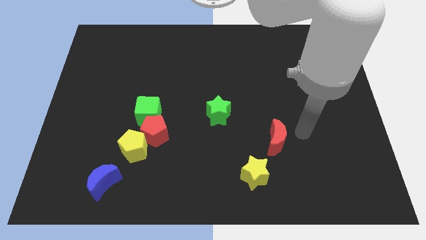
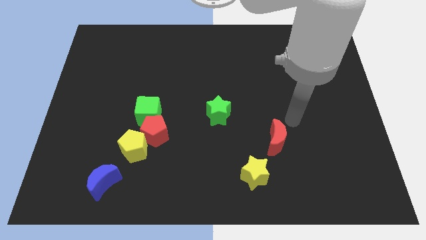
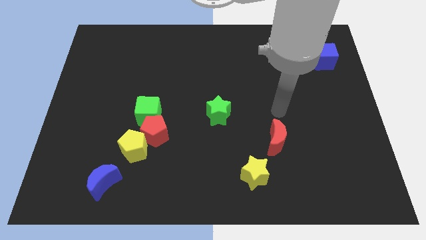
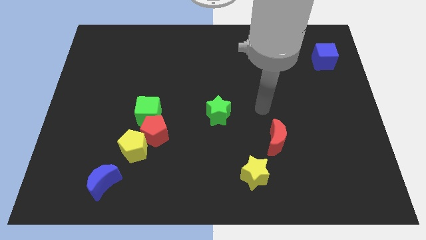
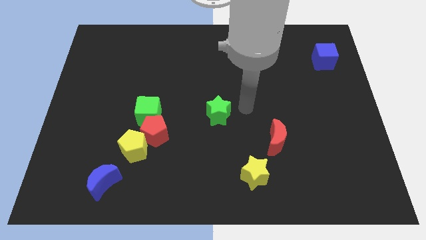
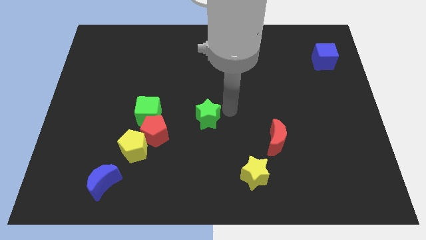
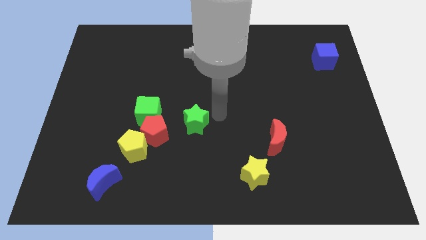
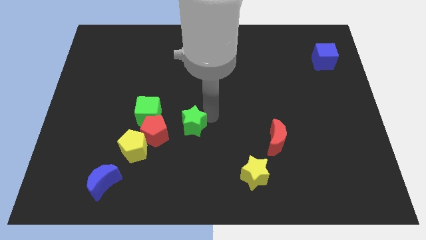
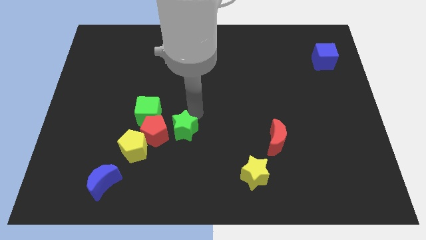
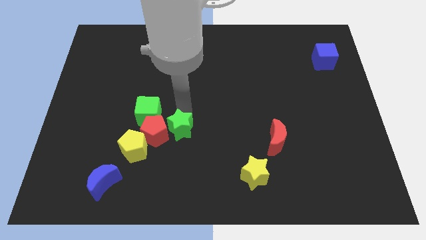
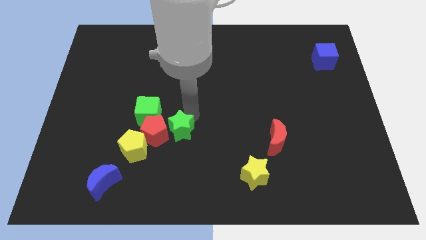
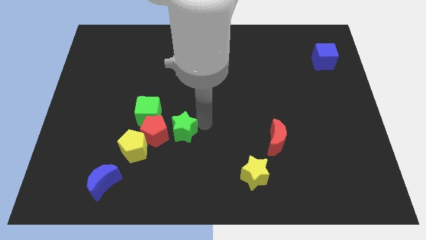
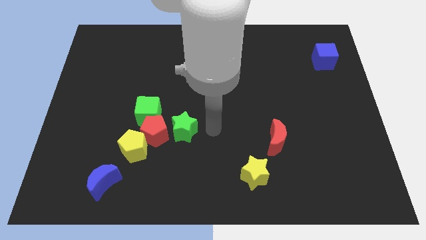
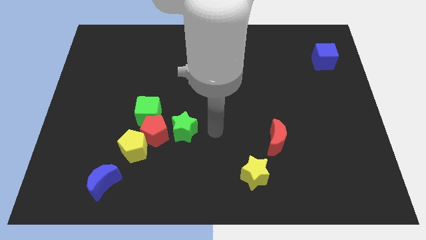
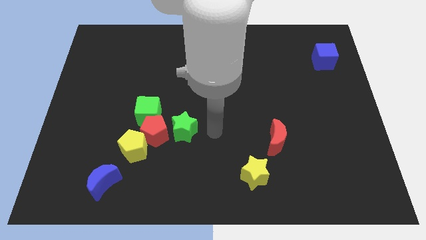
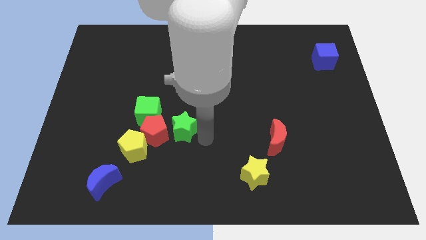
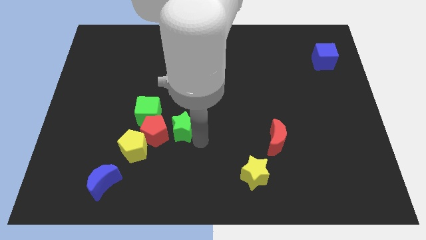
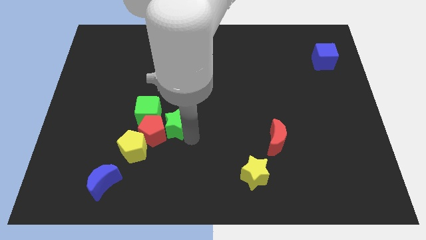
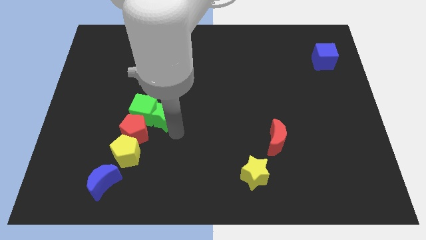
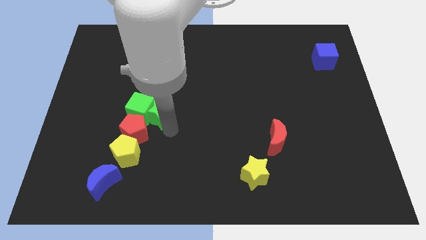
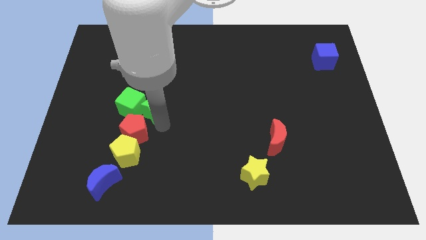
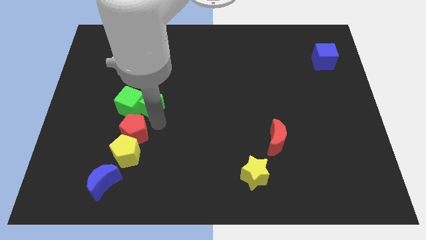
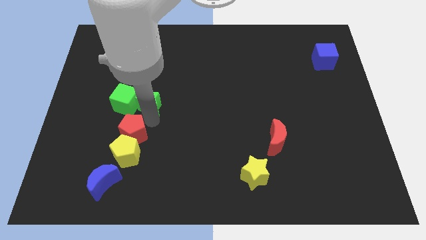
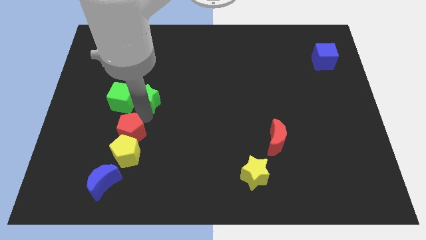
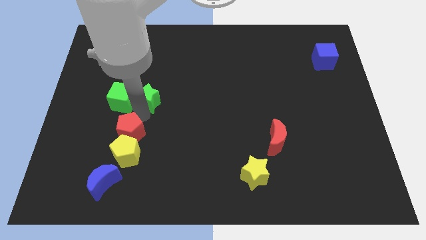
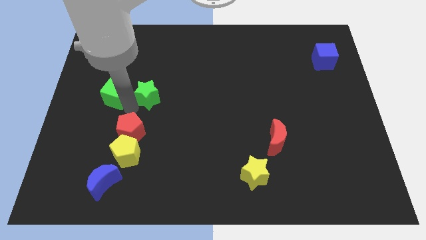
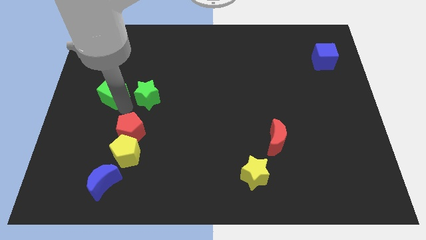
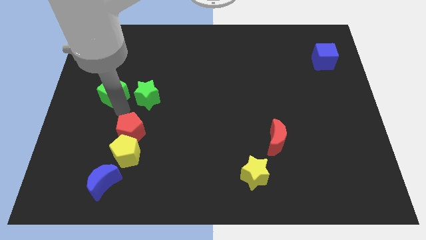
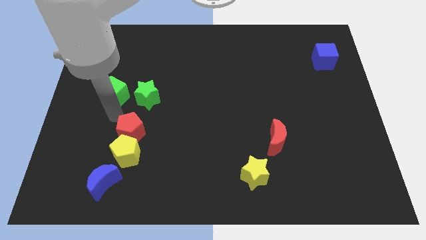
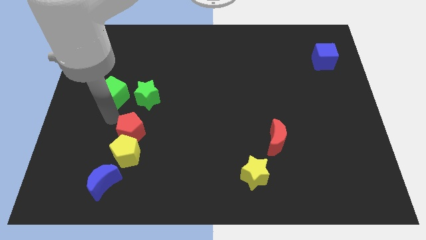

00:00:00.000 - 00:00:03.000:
place green star adjacent to green cube

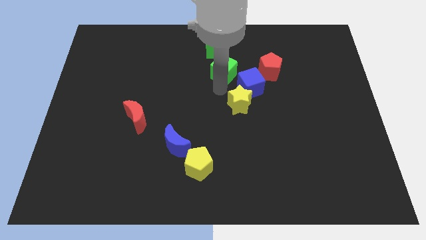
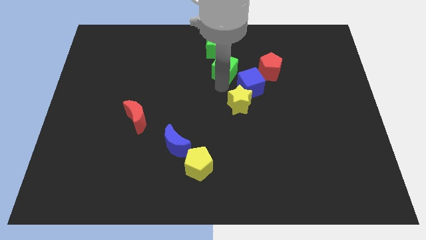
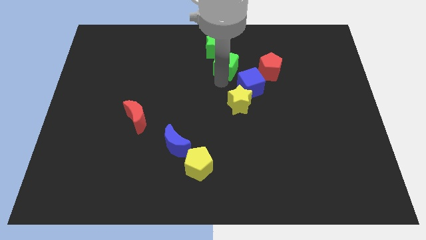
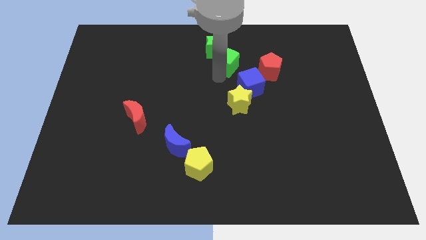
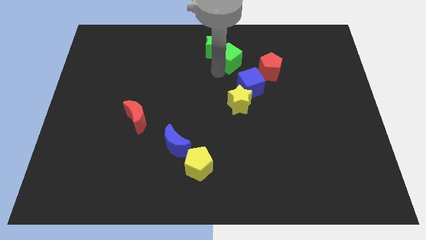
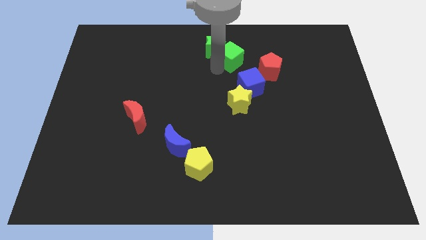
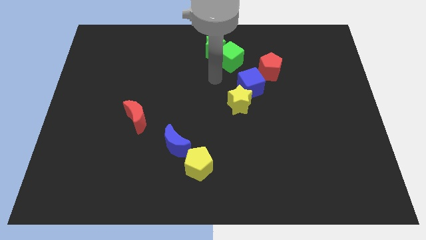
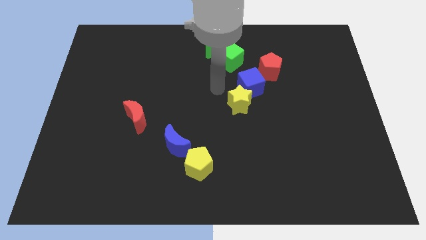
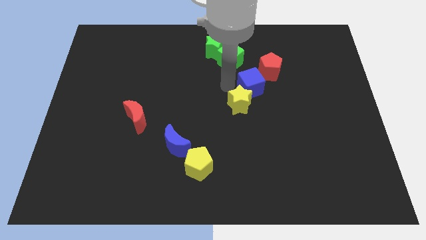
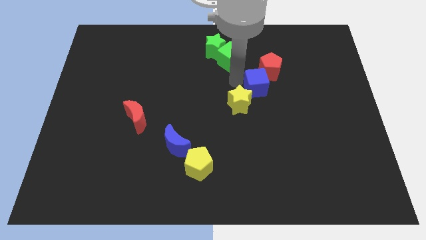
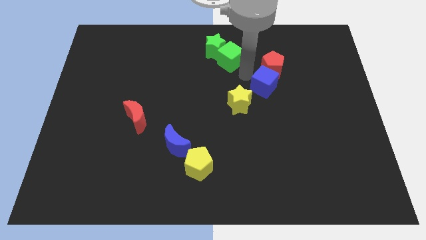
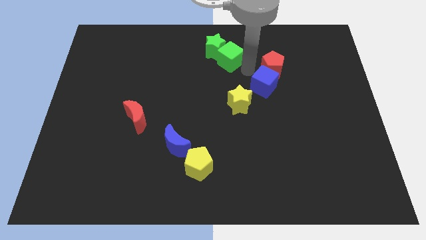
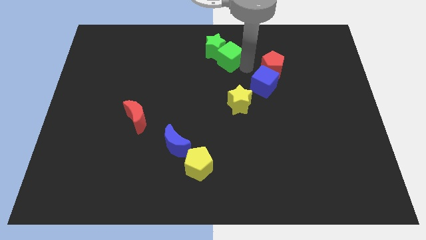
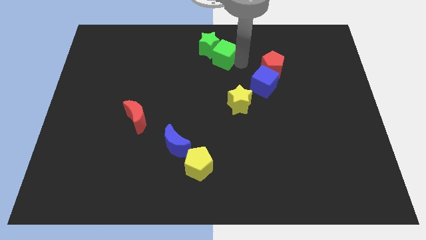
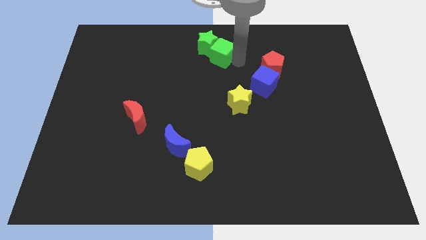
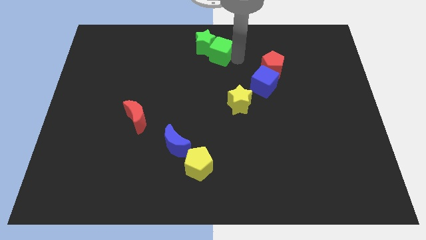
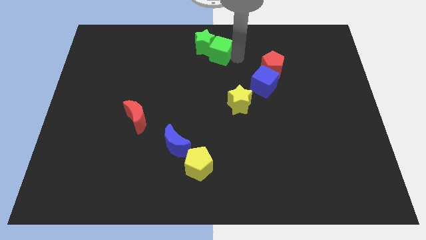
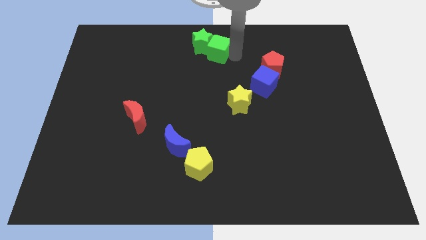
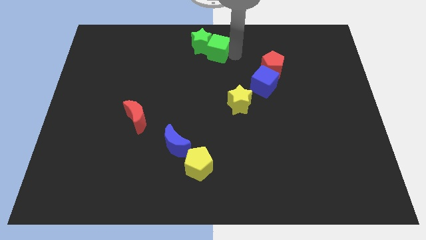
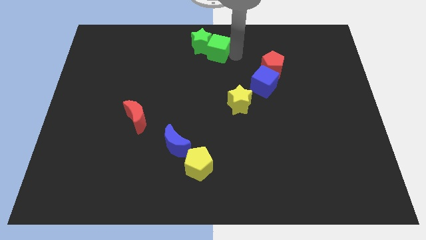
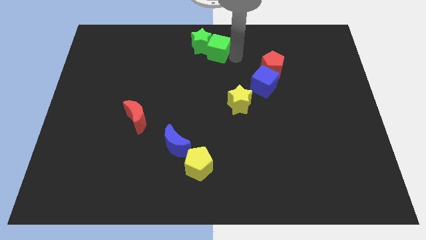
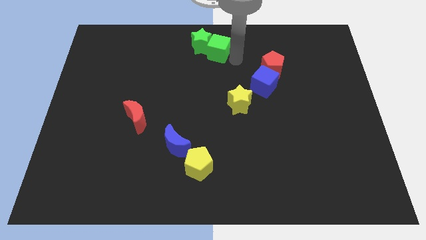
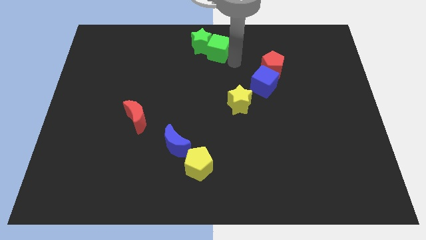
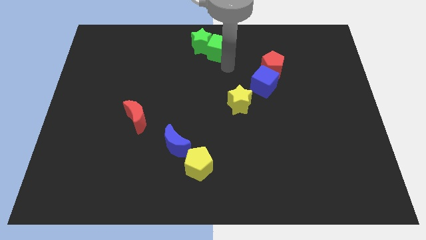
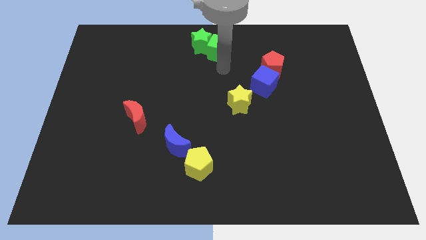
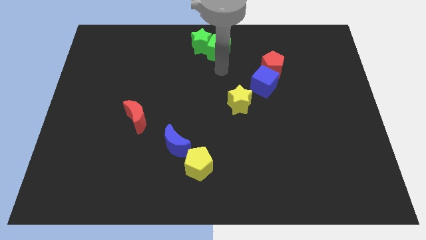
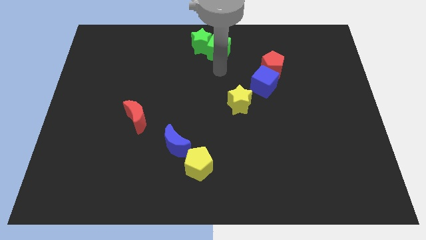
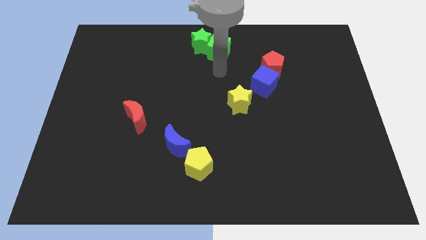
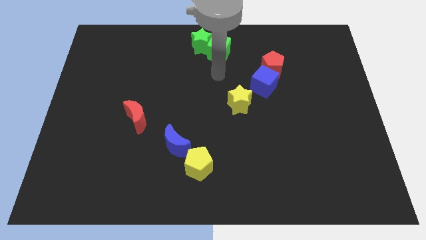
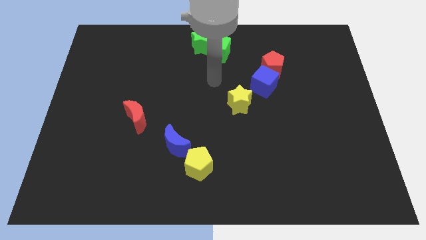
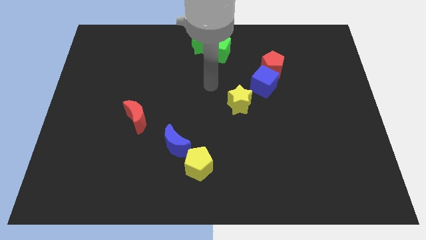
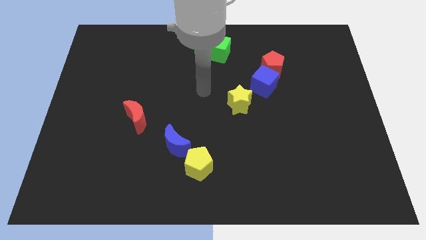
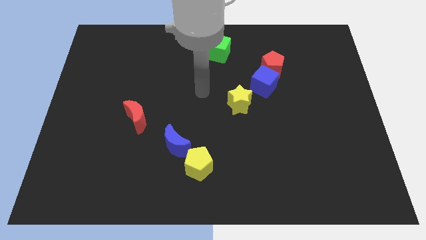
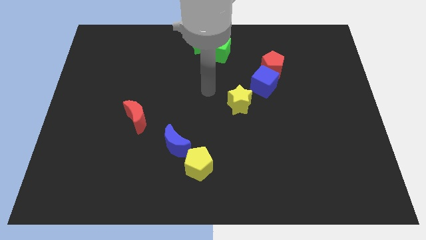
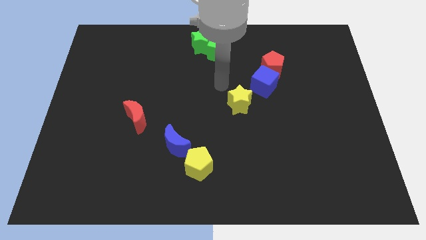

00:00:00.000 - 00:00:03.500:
move the green cube to the top center of the board

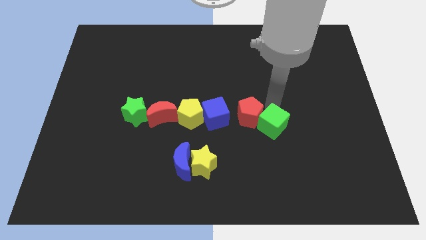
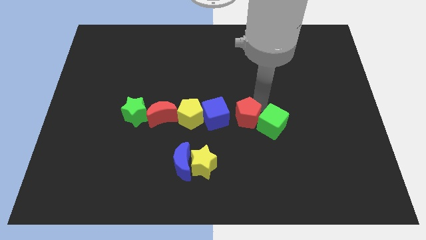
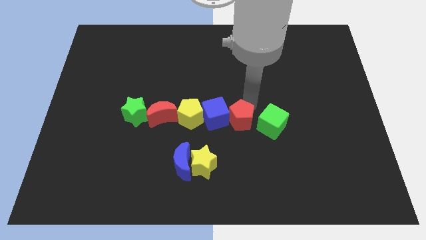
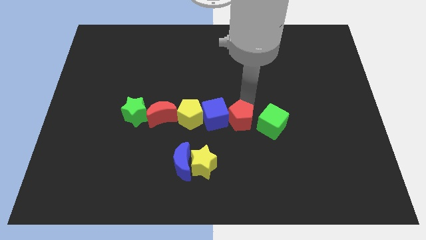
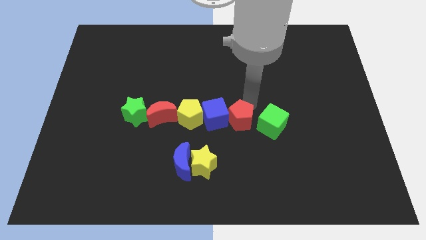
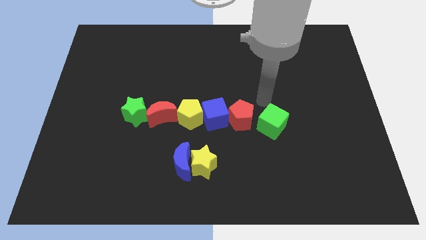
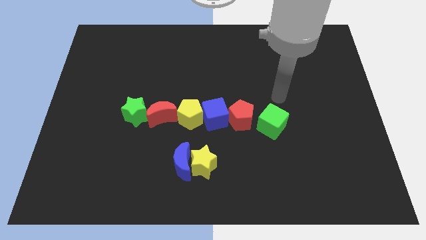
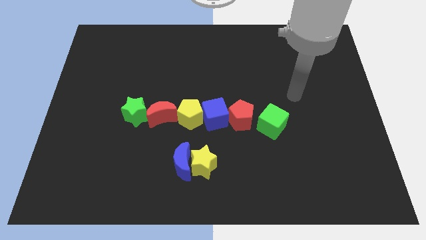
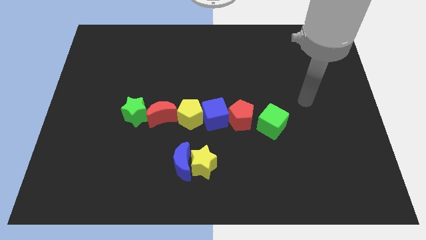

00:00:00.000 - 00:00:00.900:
push the red pentagon to the right of the blue cube

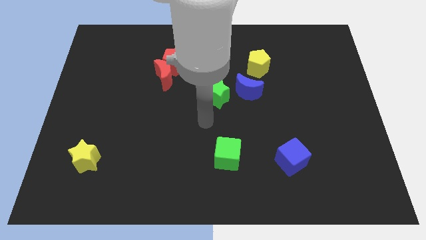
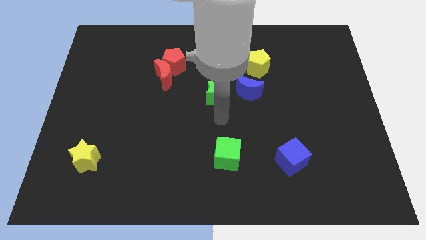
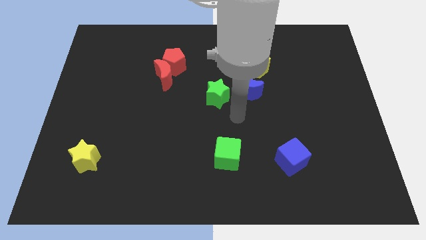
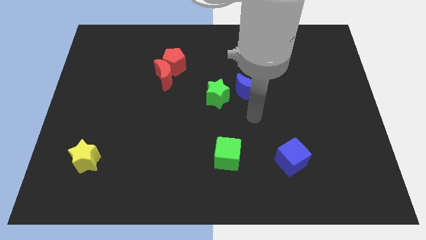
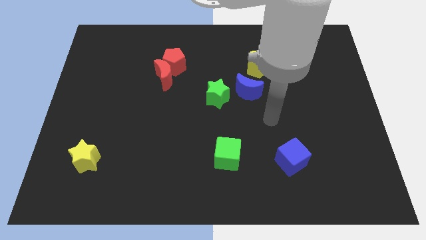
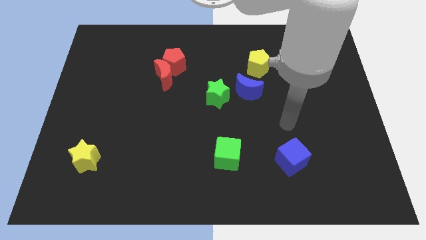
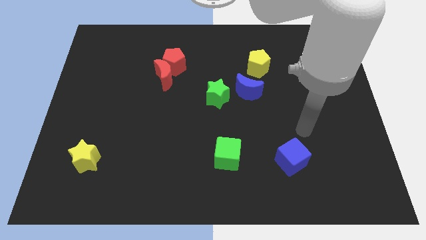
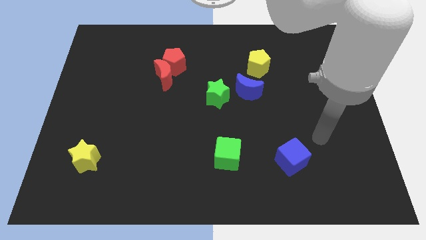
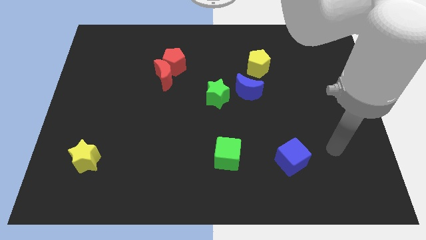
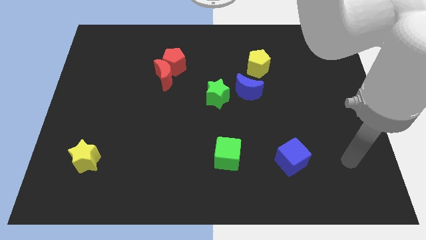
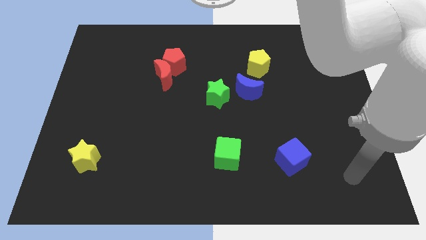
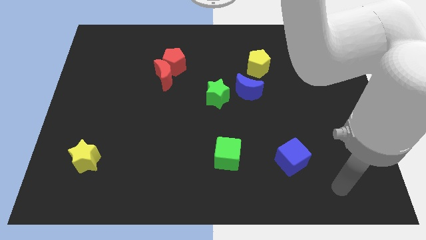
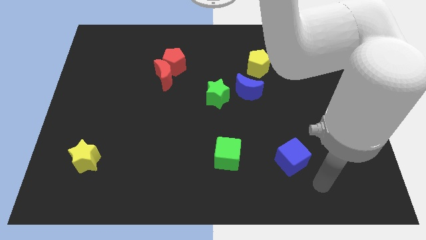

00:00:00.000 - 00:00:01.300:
point your arm at the bottom right side of blue cube

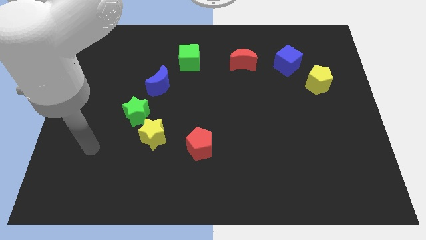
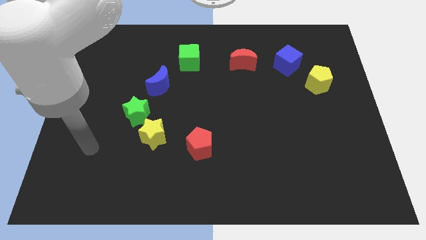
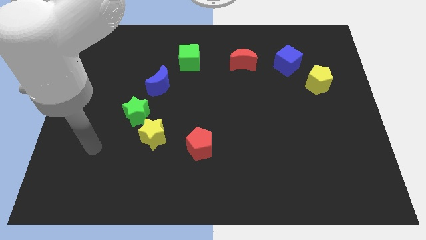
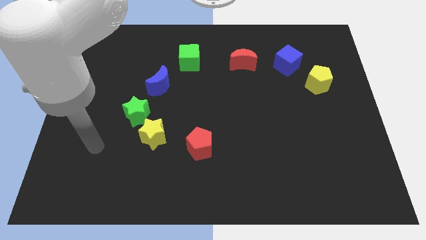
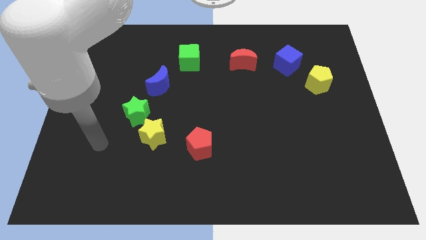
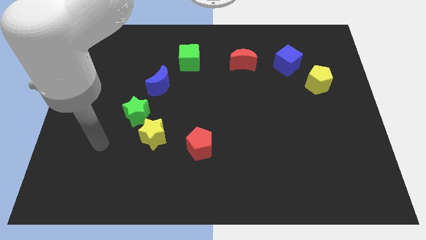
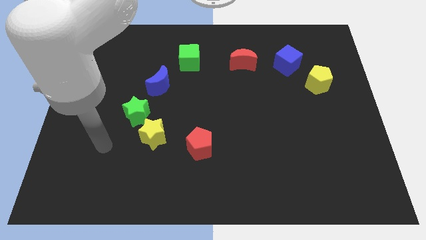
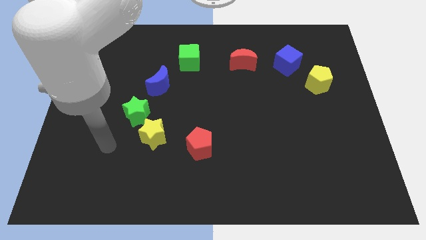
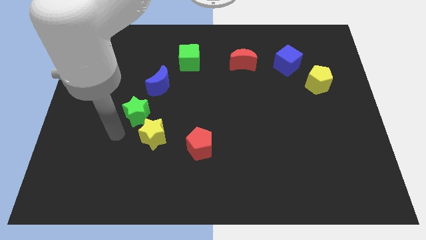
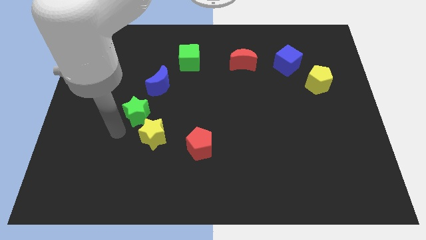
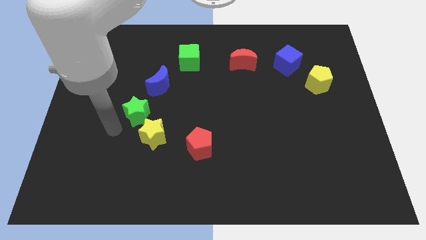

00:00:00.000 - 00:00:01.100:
place the arm to the bottom left side of the green star
